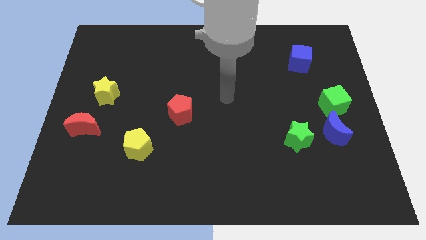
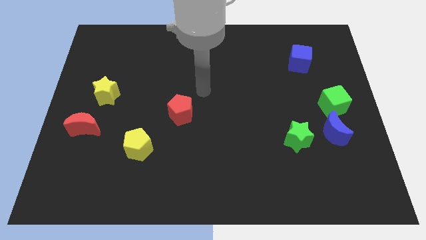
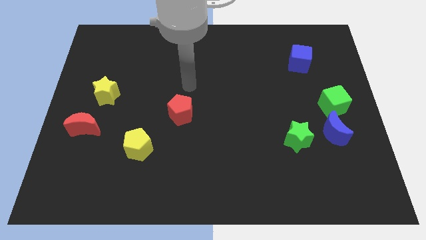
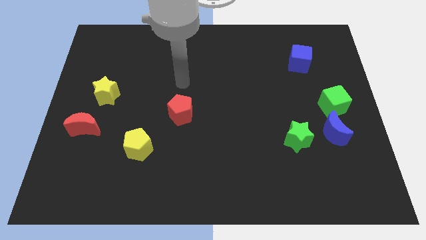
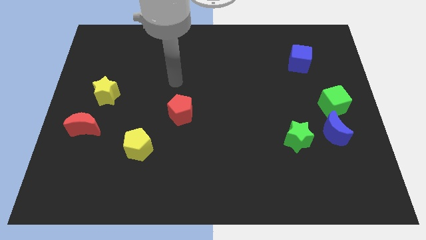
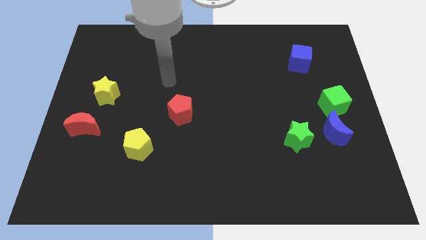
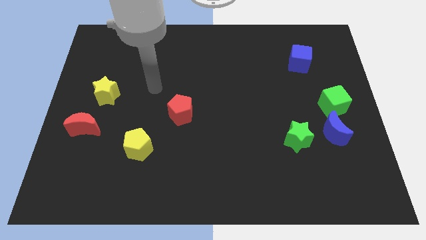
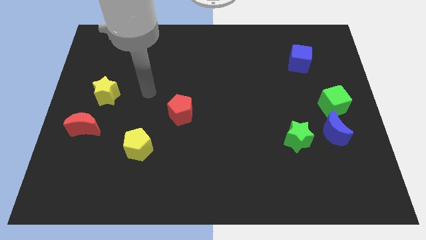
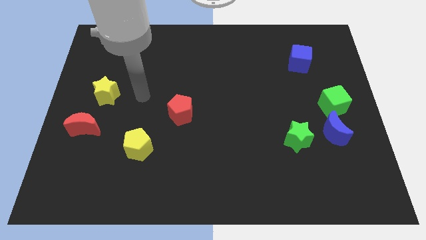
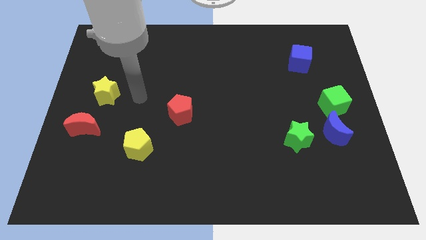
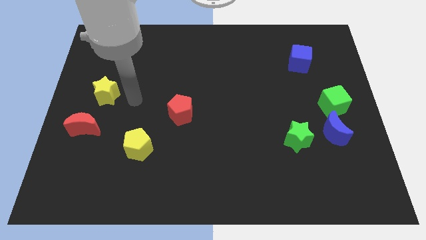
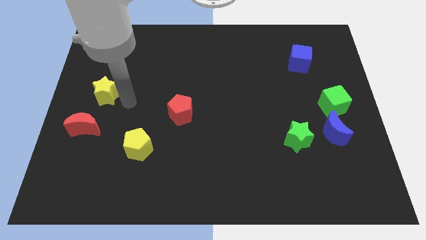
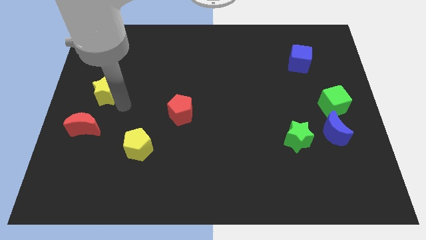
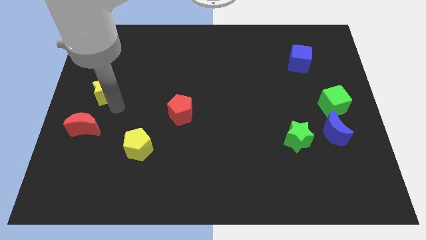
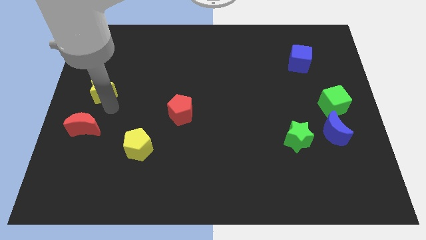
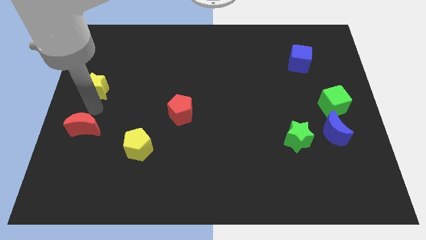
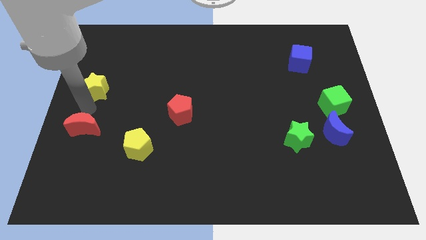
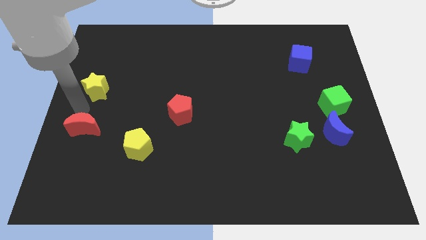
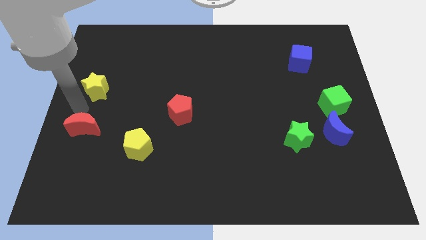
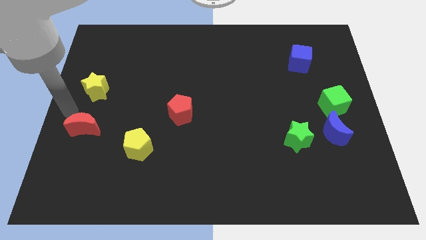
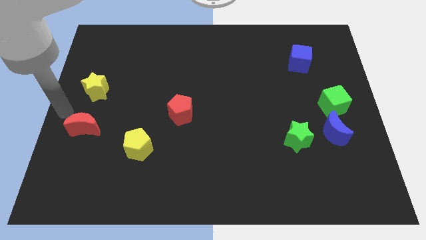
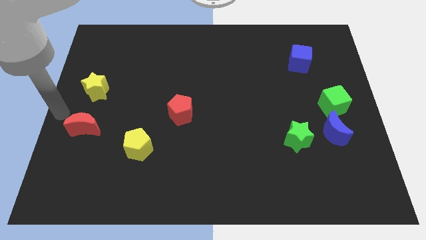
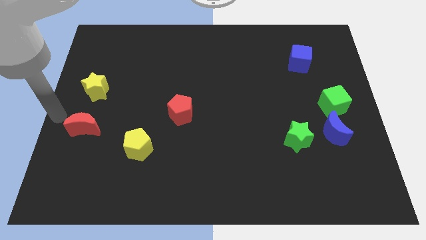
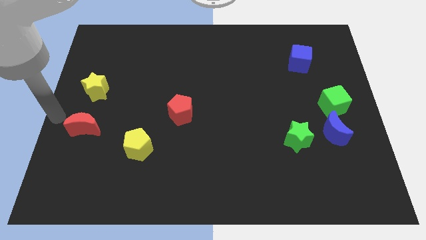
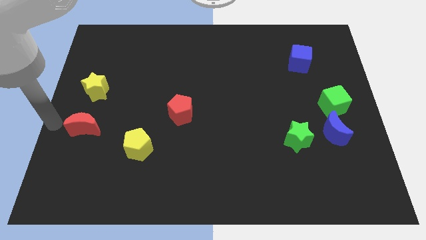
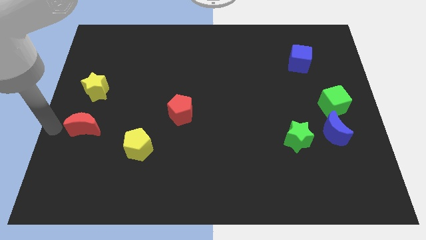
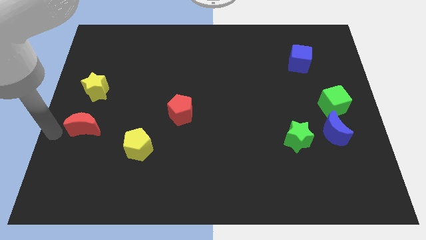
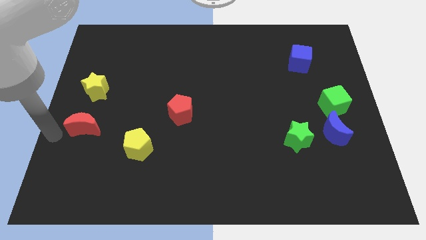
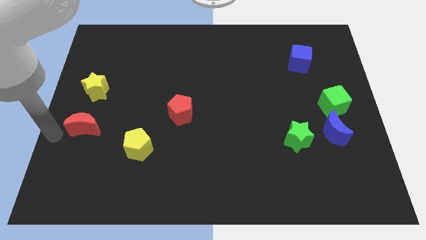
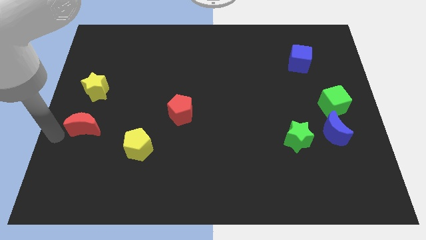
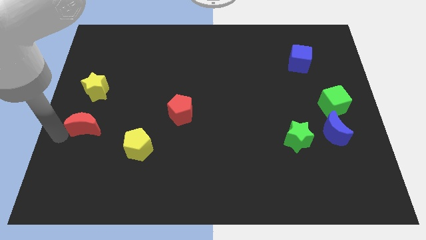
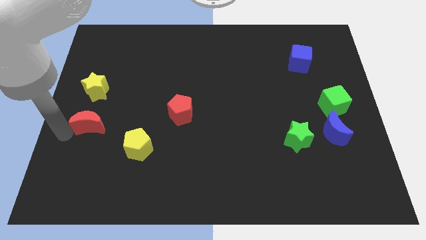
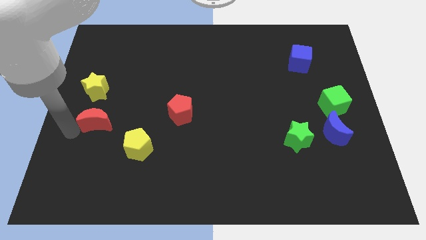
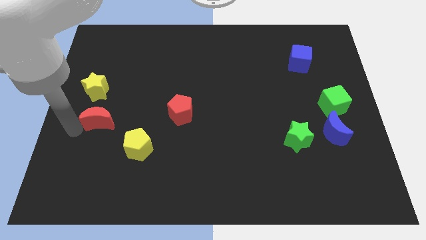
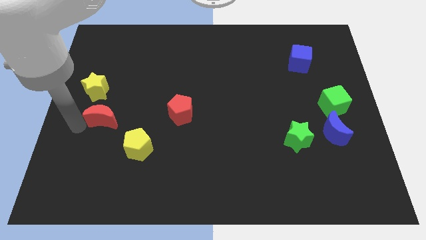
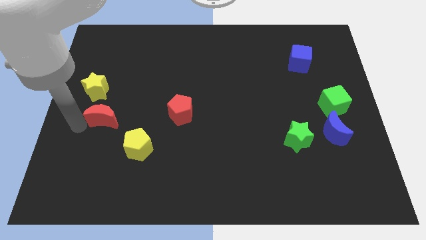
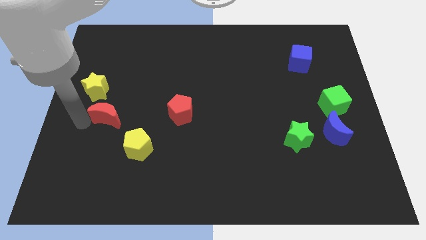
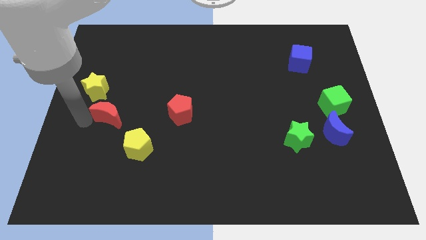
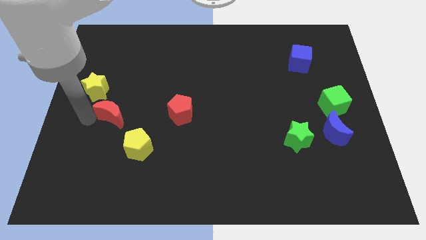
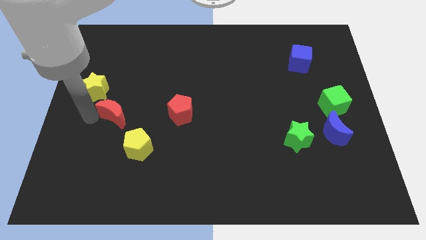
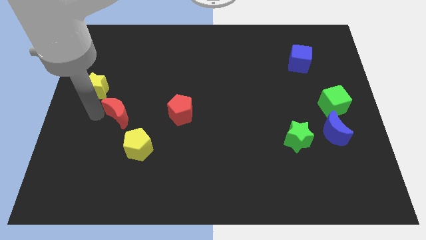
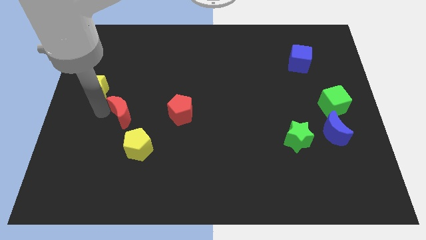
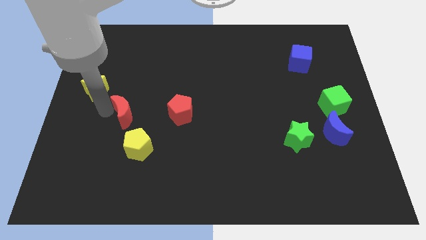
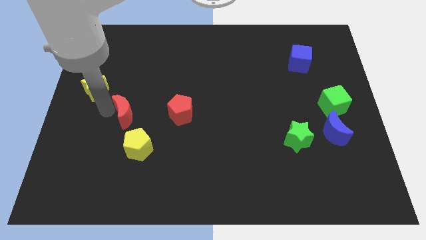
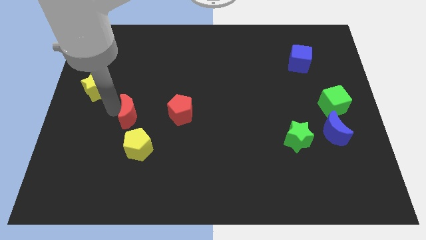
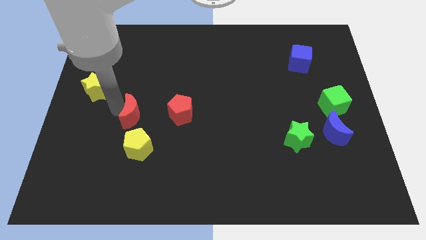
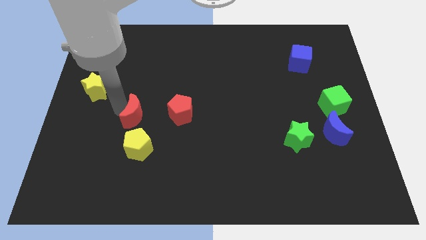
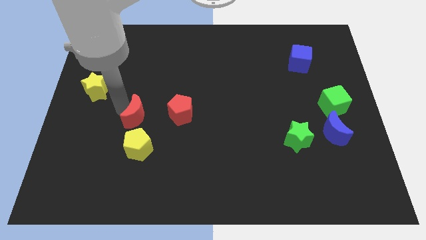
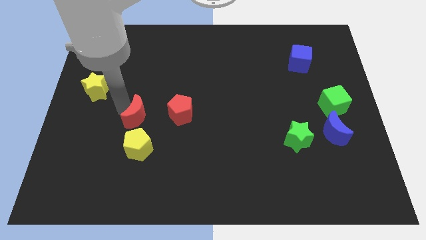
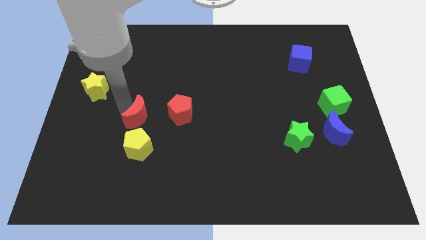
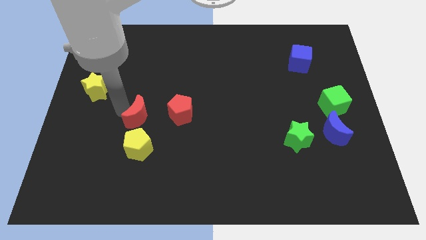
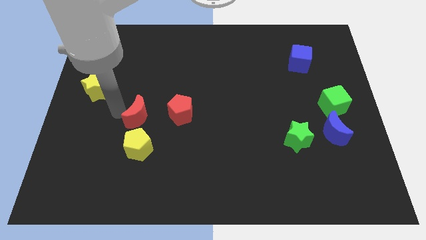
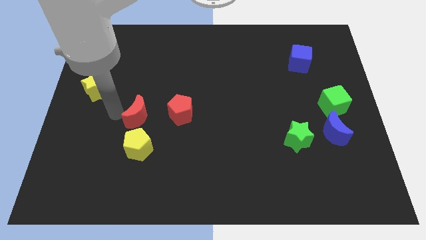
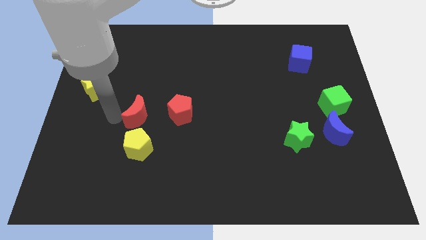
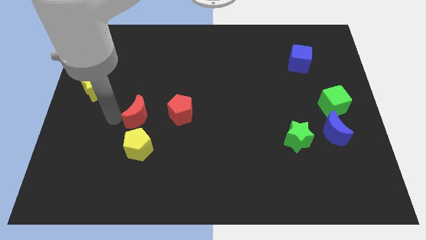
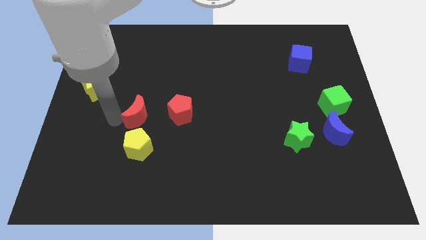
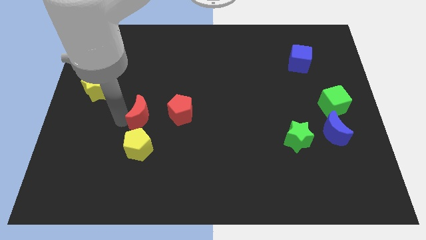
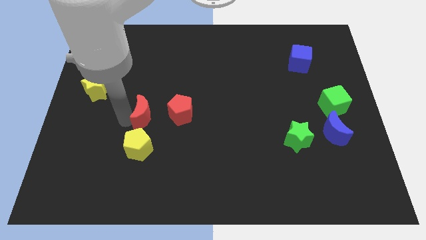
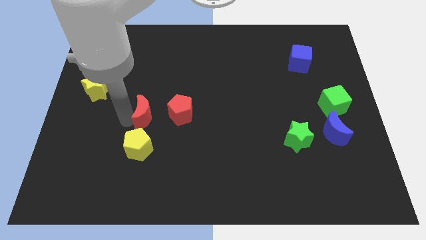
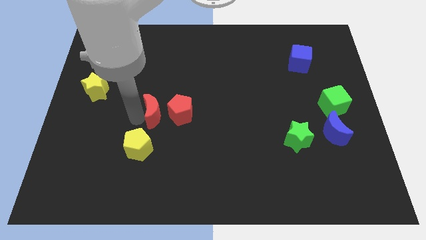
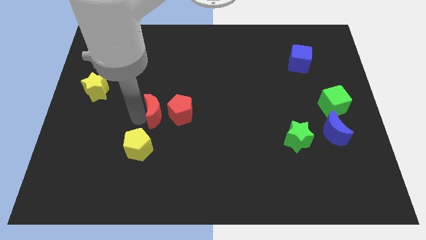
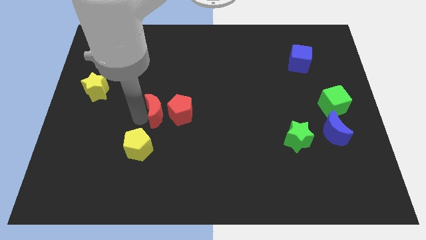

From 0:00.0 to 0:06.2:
push the red moon close to the red pentagon

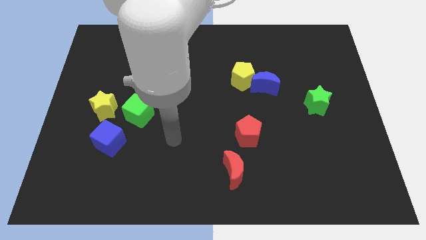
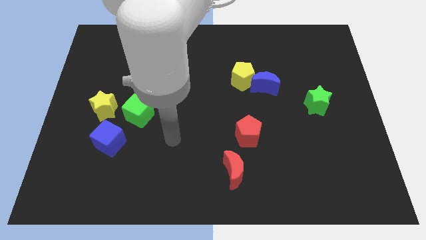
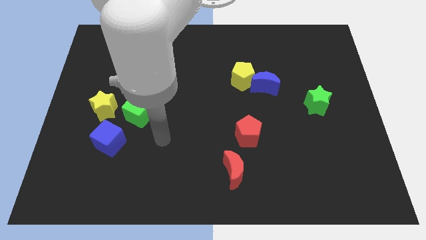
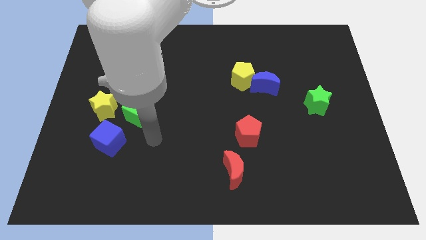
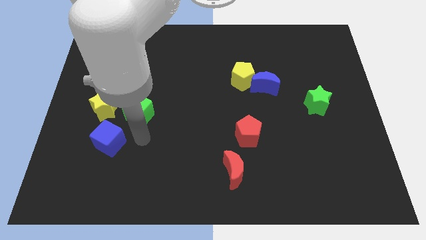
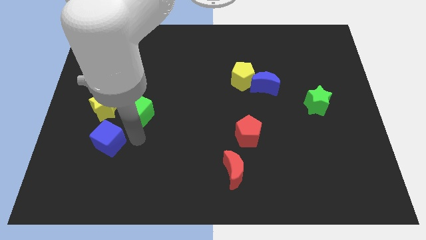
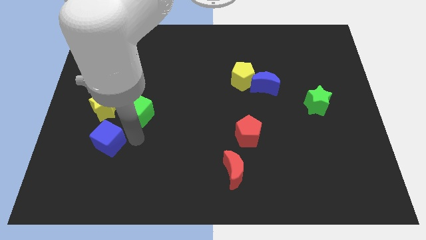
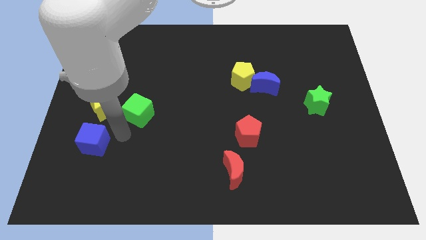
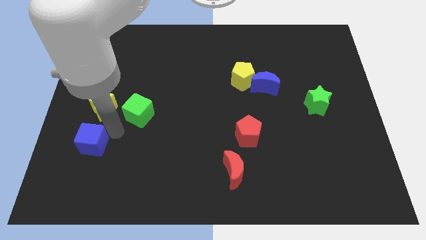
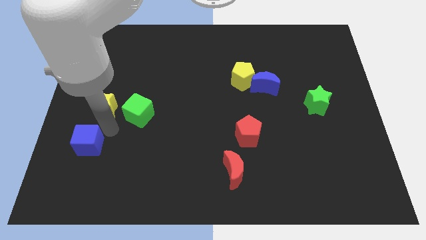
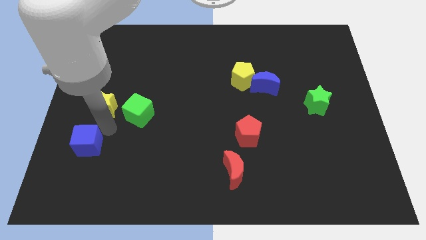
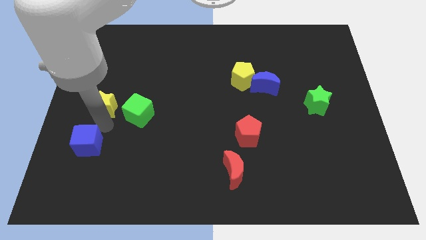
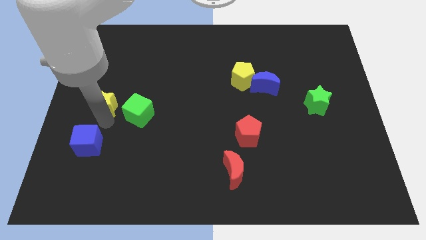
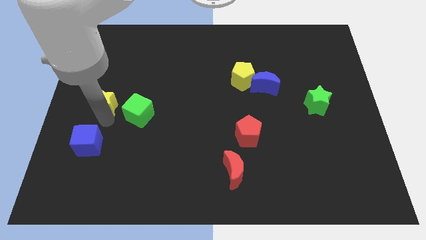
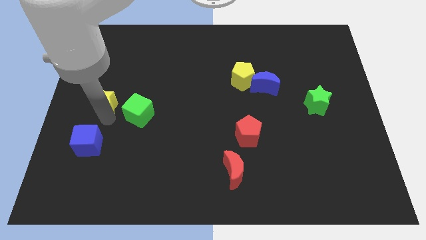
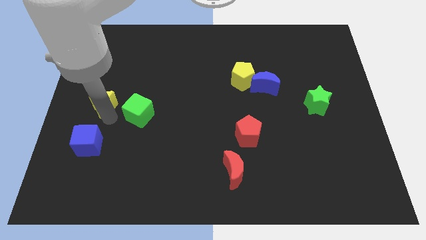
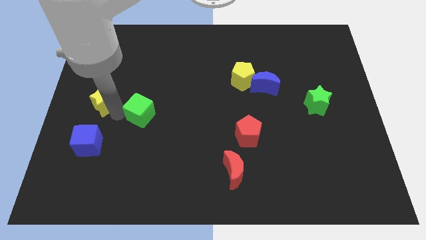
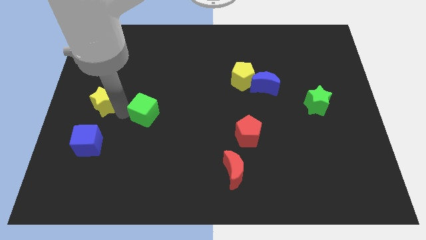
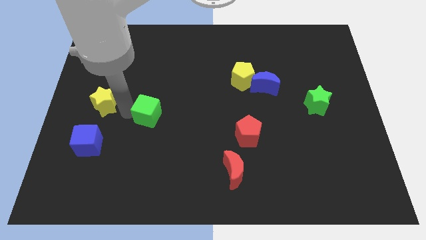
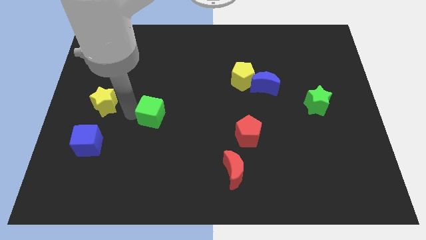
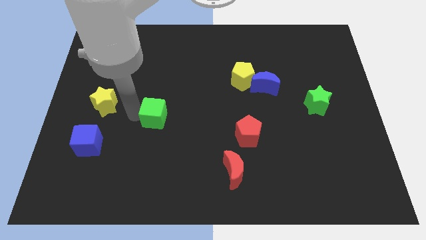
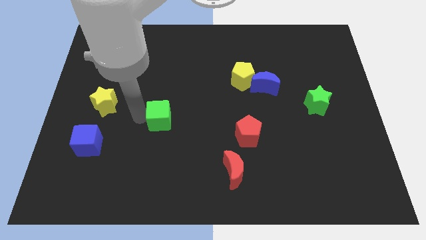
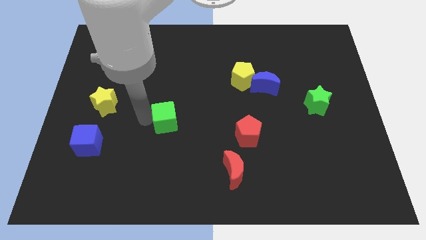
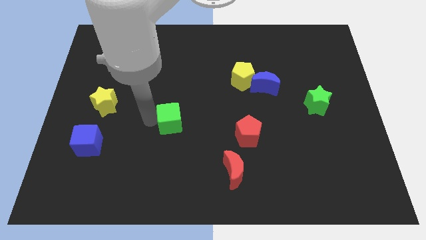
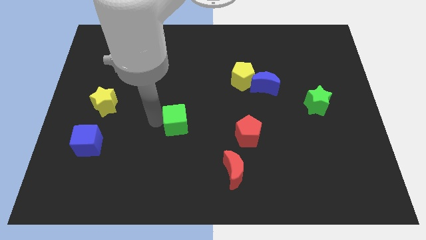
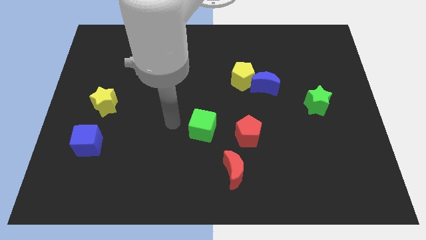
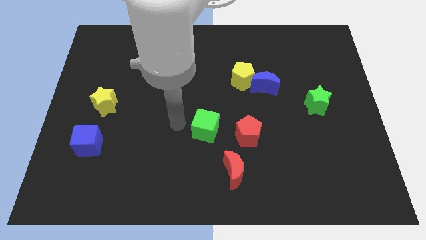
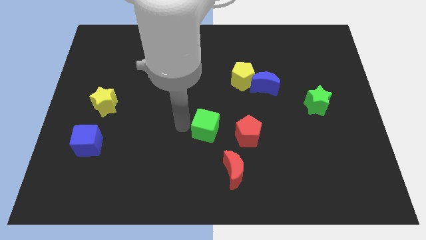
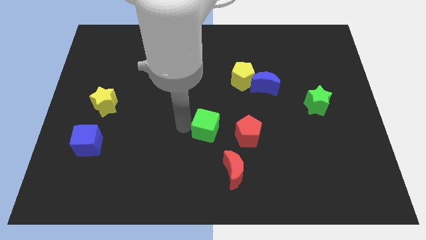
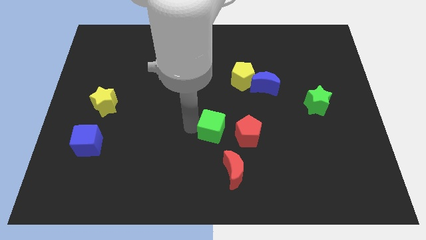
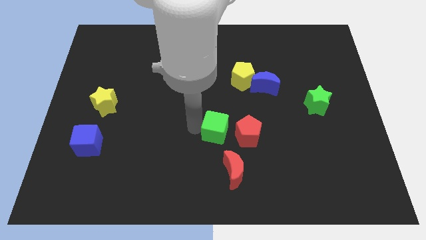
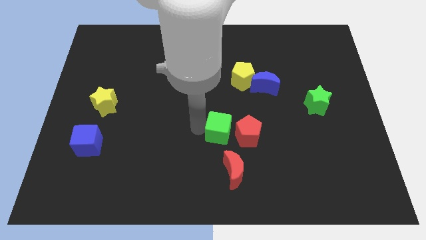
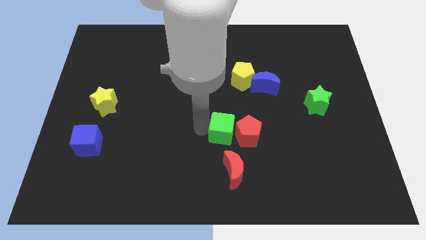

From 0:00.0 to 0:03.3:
put the green cube towards the red pentagon
